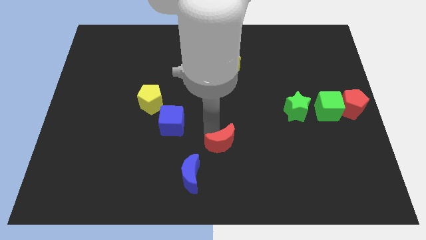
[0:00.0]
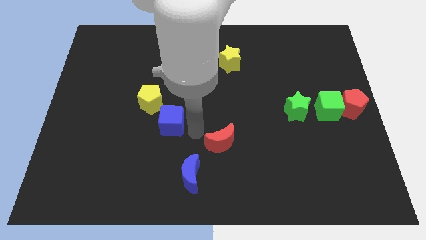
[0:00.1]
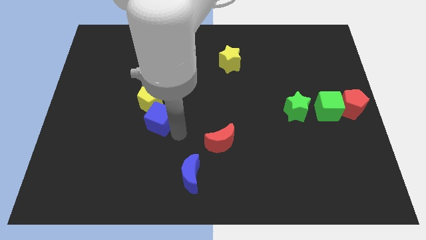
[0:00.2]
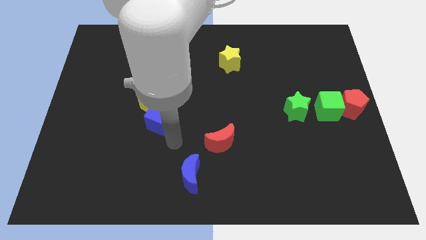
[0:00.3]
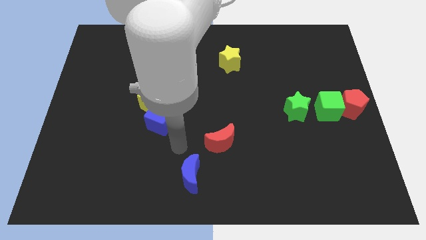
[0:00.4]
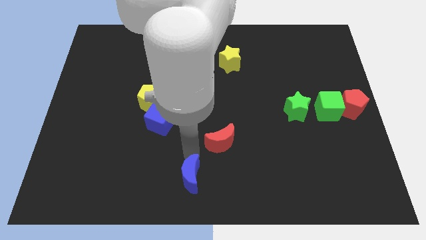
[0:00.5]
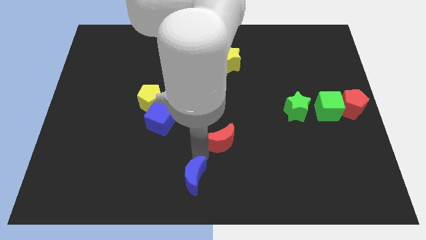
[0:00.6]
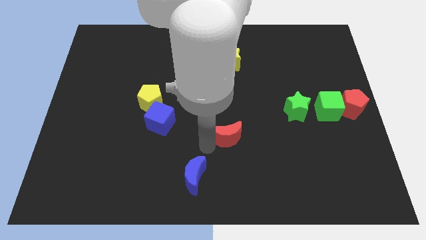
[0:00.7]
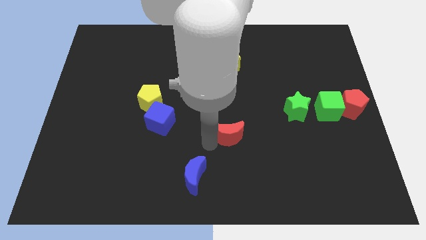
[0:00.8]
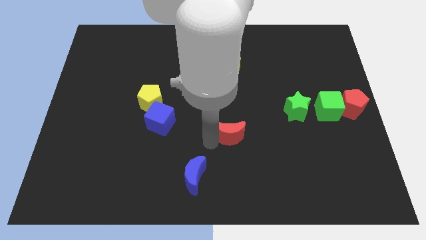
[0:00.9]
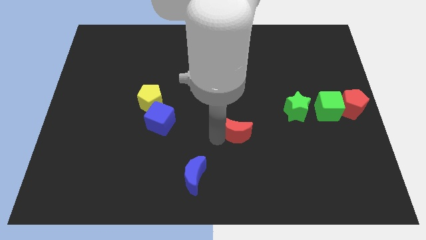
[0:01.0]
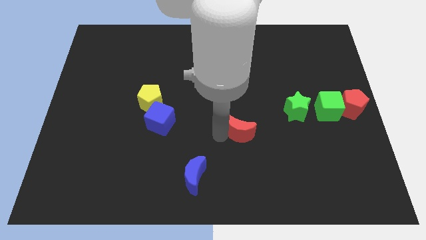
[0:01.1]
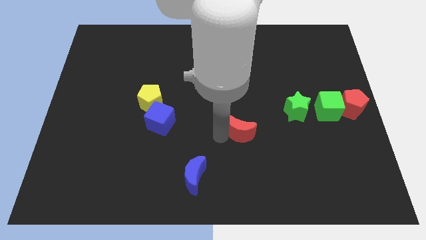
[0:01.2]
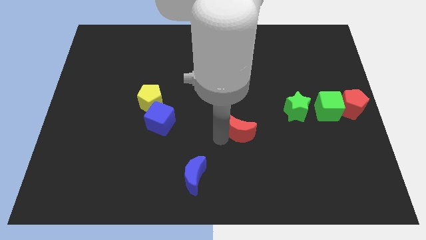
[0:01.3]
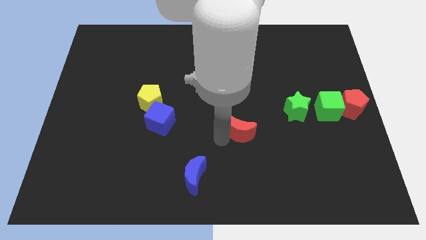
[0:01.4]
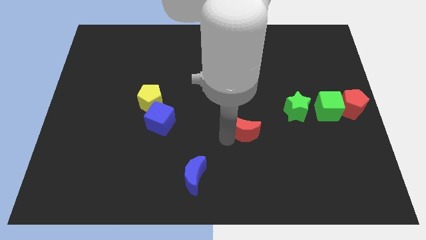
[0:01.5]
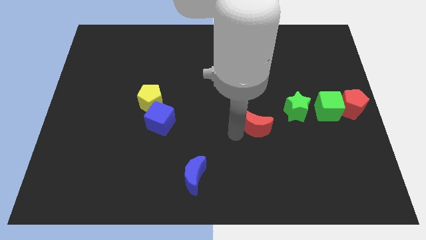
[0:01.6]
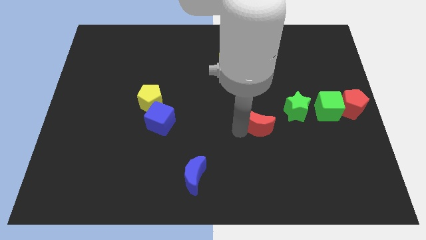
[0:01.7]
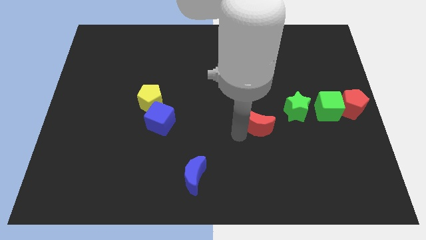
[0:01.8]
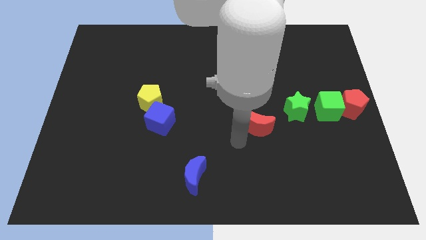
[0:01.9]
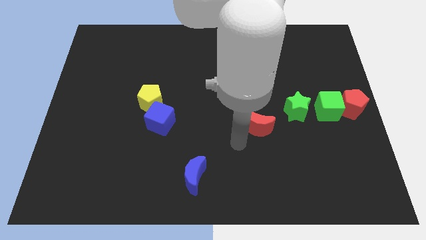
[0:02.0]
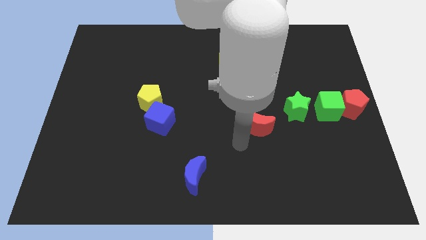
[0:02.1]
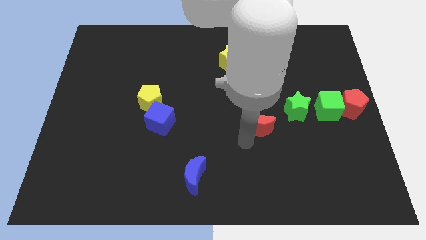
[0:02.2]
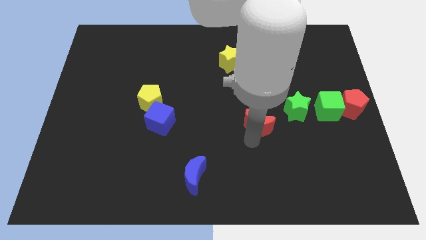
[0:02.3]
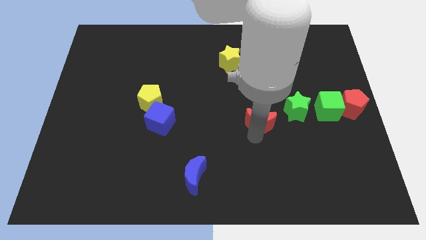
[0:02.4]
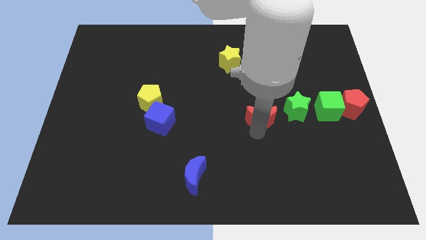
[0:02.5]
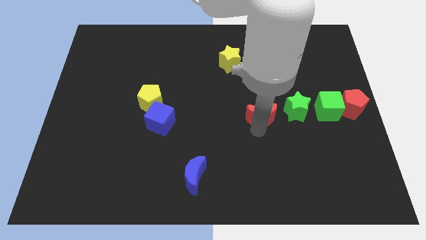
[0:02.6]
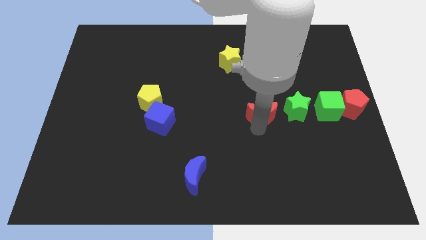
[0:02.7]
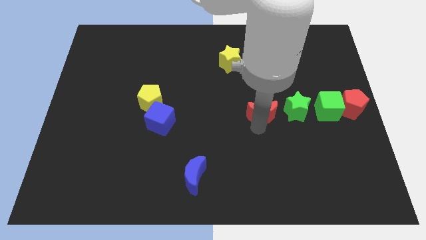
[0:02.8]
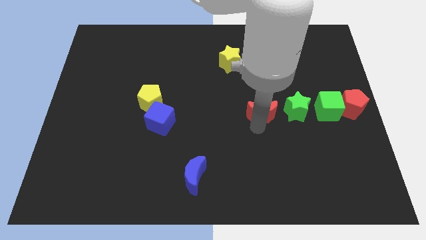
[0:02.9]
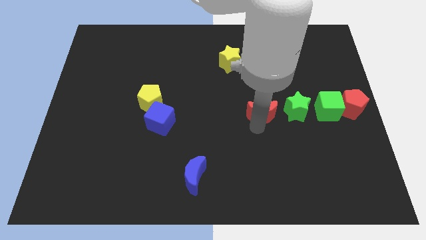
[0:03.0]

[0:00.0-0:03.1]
place the red moon diagonal to the blue moon

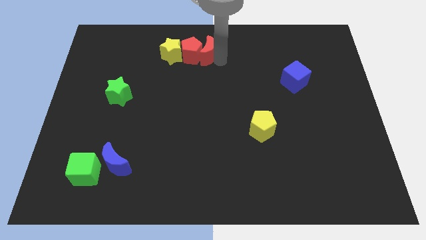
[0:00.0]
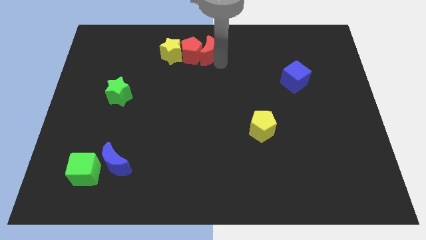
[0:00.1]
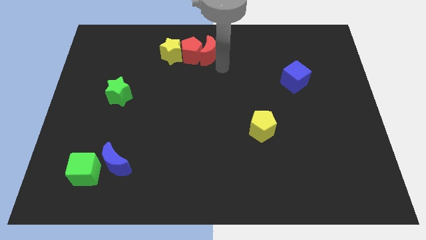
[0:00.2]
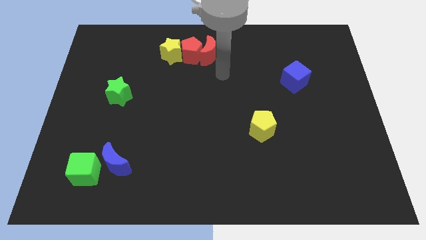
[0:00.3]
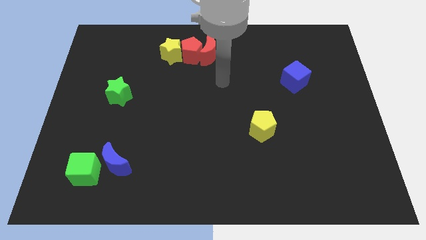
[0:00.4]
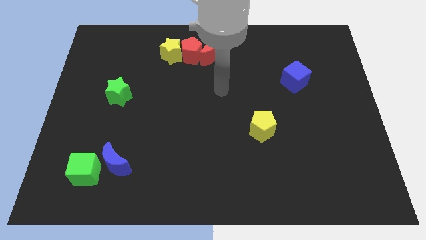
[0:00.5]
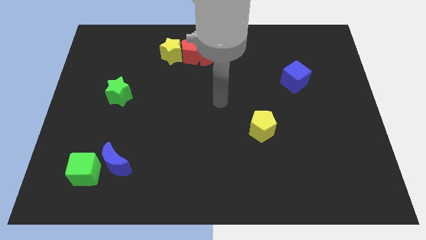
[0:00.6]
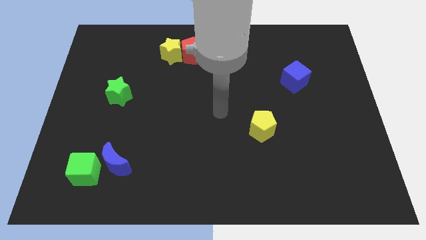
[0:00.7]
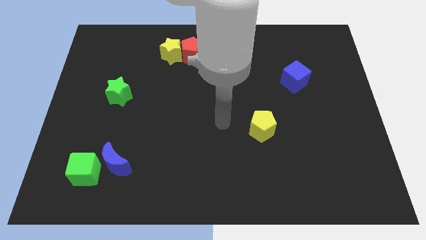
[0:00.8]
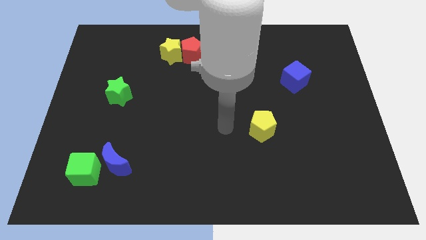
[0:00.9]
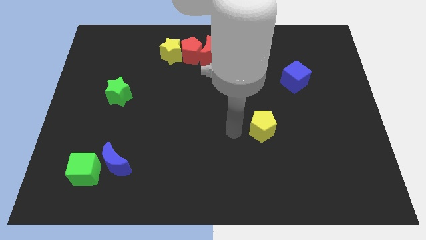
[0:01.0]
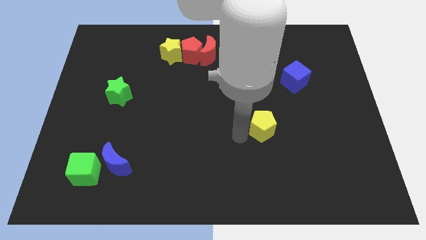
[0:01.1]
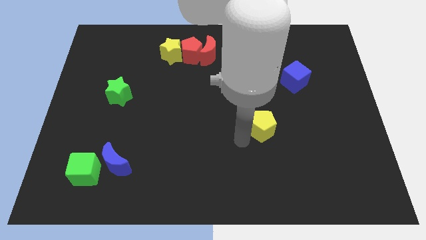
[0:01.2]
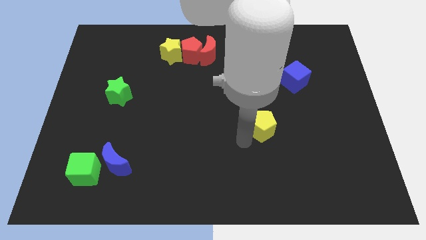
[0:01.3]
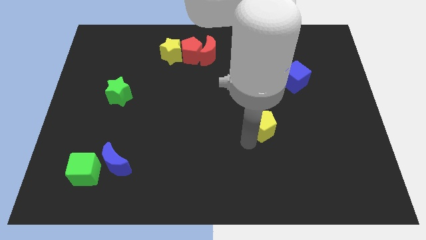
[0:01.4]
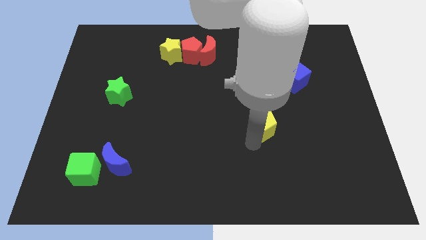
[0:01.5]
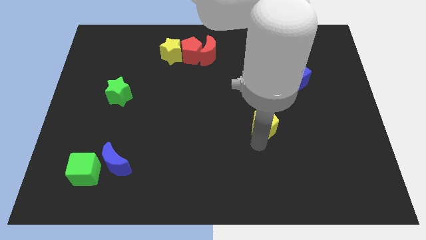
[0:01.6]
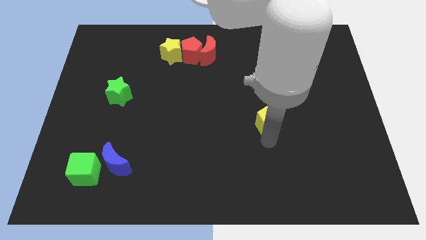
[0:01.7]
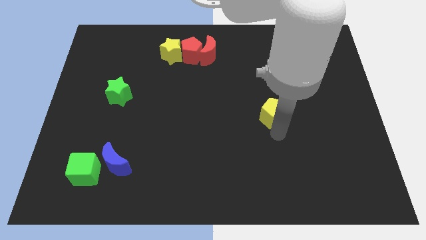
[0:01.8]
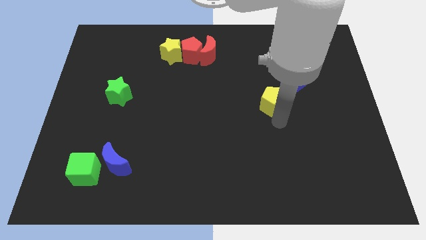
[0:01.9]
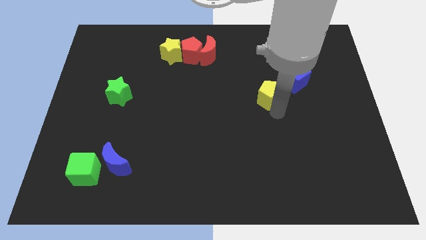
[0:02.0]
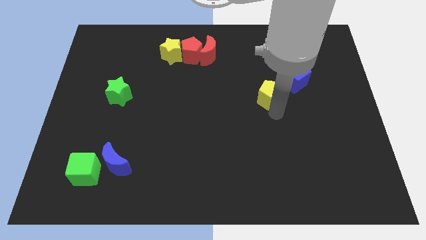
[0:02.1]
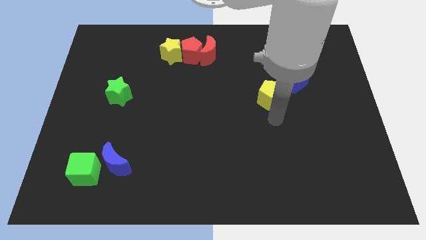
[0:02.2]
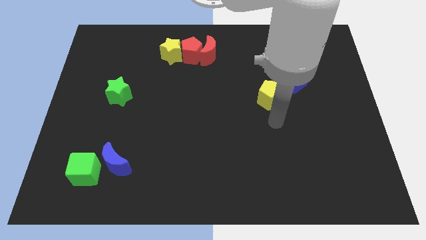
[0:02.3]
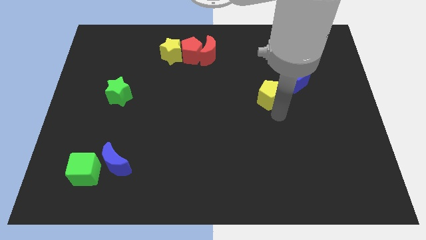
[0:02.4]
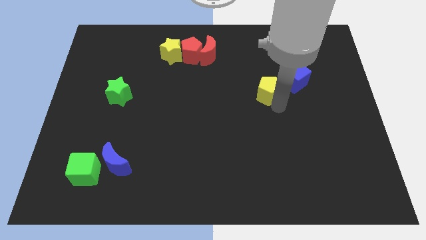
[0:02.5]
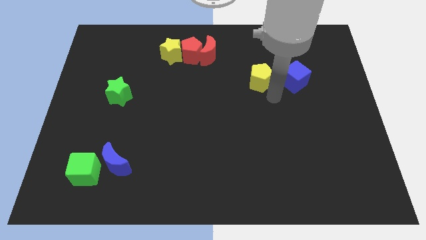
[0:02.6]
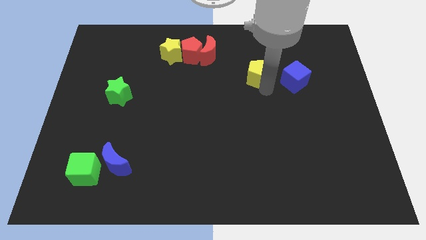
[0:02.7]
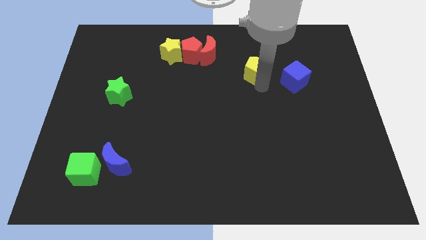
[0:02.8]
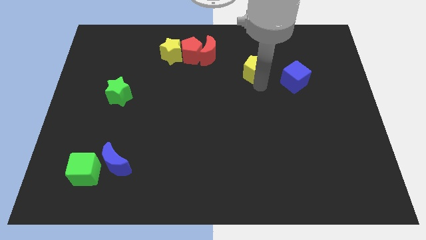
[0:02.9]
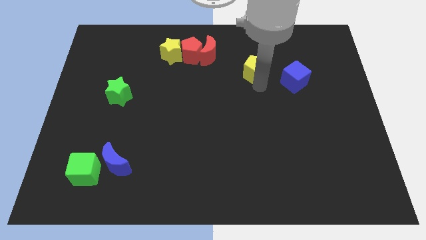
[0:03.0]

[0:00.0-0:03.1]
push yellow pentagon to top left of green cube

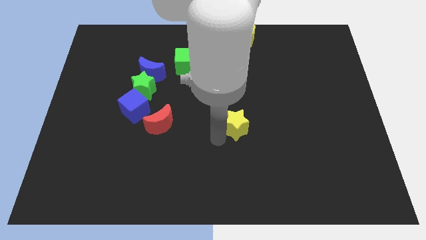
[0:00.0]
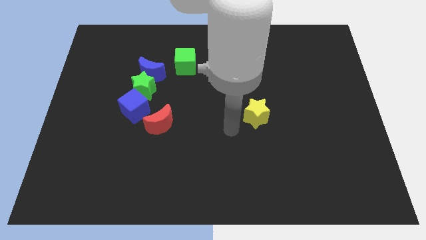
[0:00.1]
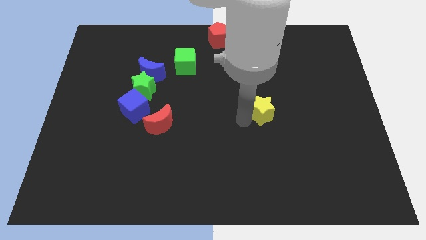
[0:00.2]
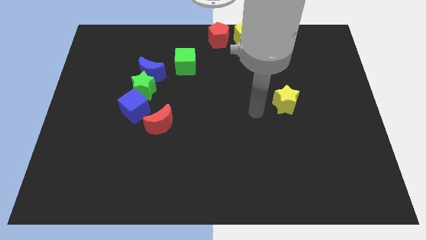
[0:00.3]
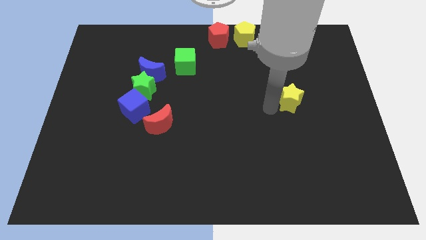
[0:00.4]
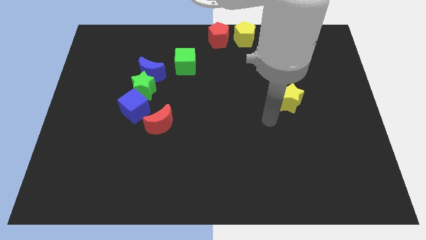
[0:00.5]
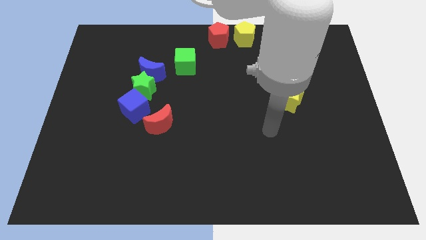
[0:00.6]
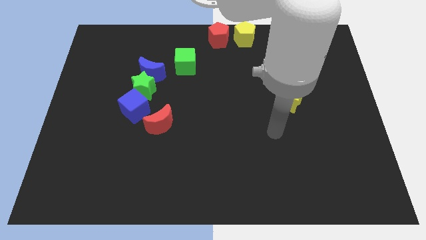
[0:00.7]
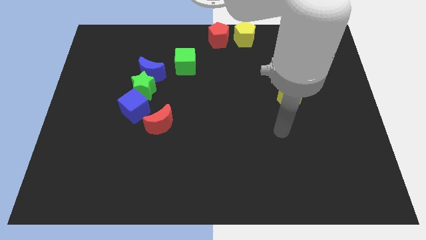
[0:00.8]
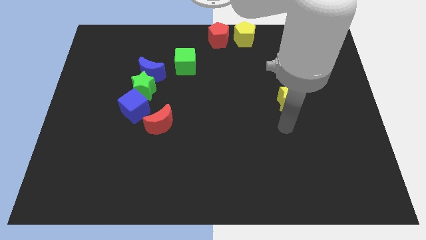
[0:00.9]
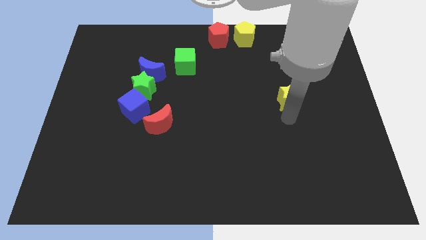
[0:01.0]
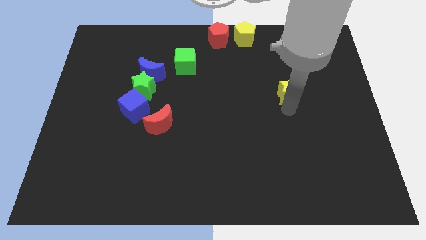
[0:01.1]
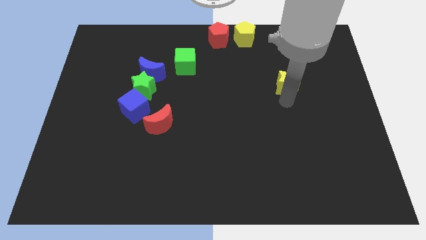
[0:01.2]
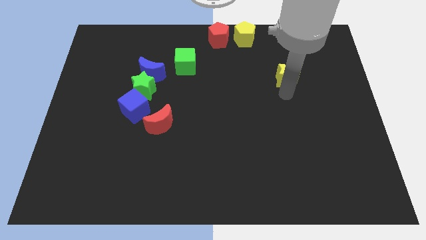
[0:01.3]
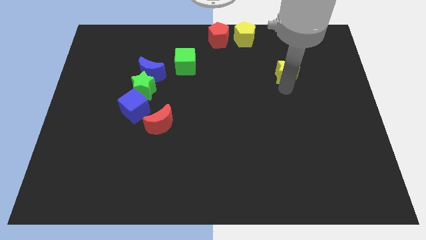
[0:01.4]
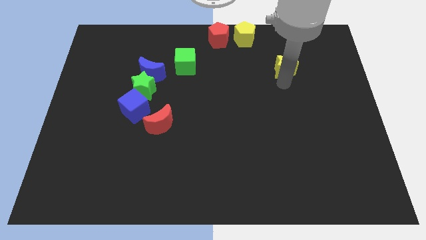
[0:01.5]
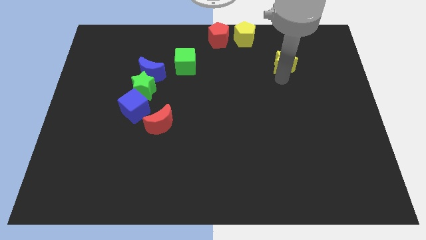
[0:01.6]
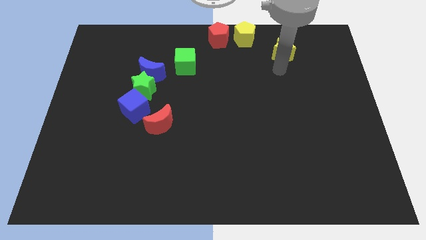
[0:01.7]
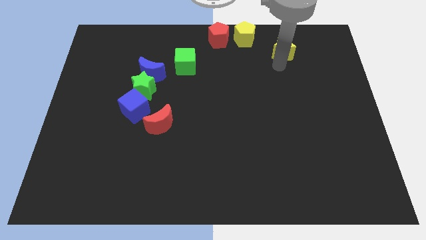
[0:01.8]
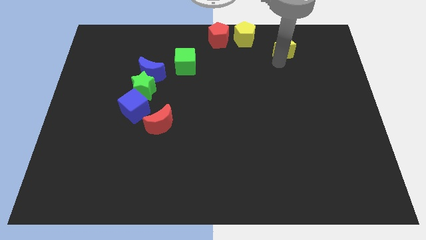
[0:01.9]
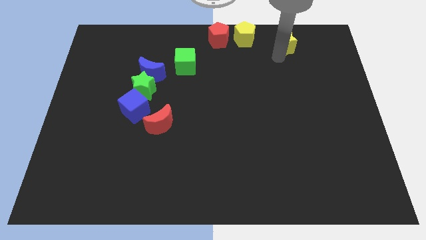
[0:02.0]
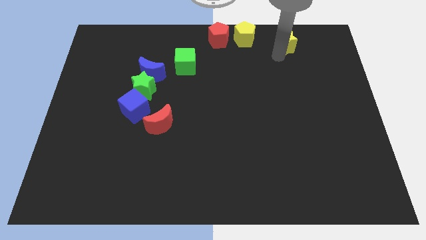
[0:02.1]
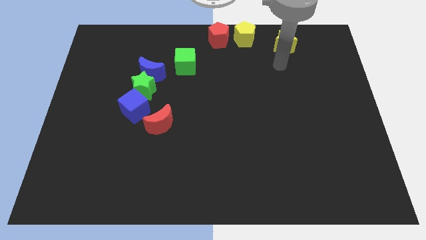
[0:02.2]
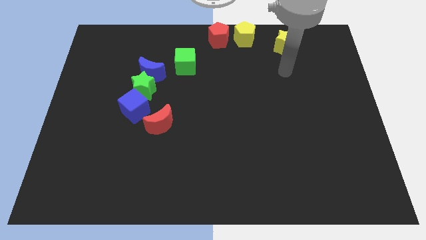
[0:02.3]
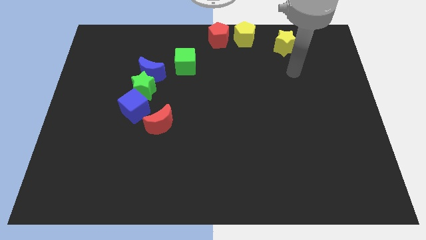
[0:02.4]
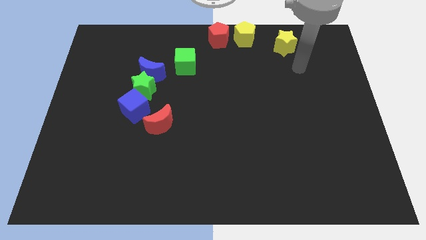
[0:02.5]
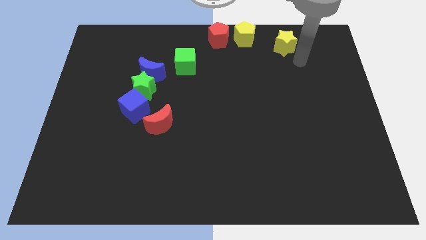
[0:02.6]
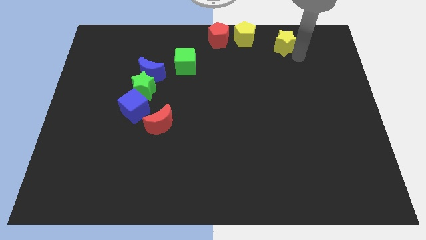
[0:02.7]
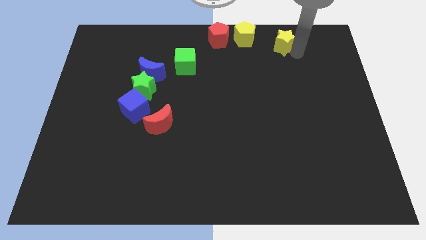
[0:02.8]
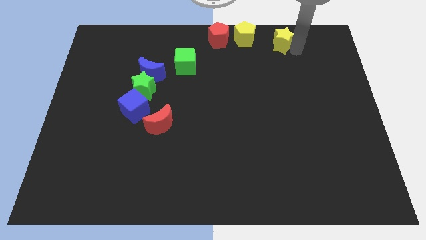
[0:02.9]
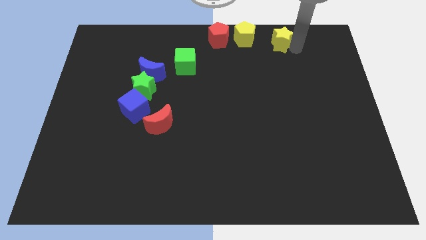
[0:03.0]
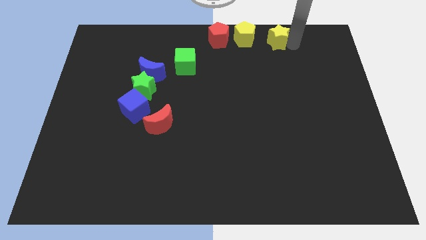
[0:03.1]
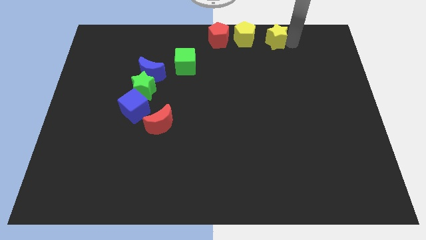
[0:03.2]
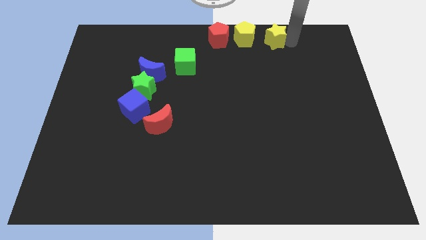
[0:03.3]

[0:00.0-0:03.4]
drag the yellow star towards the yellow pentagon
